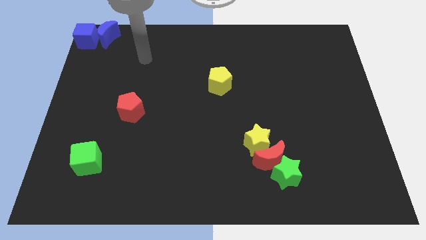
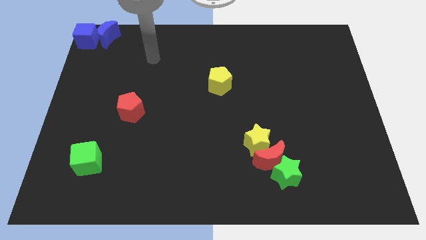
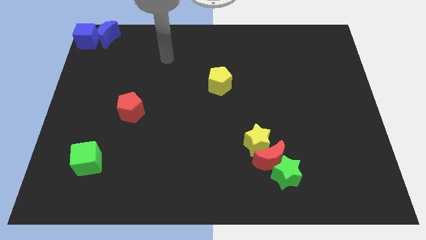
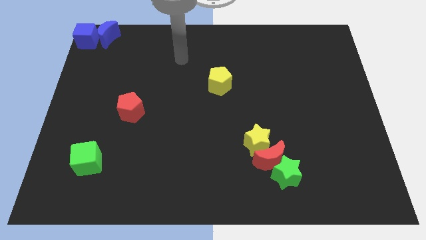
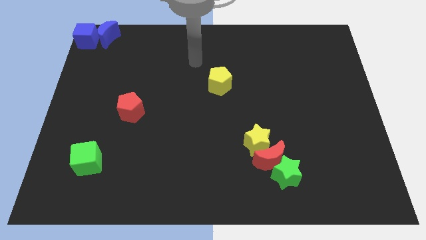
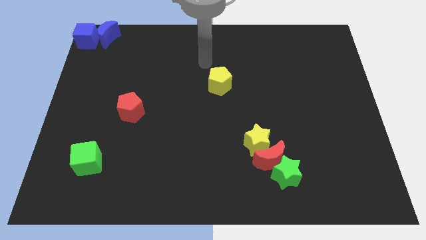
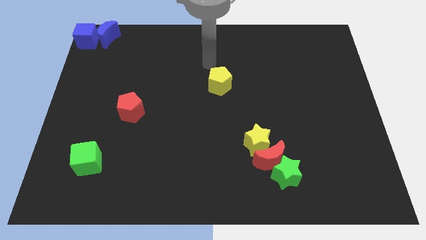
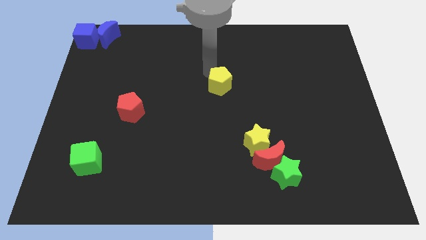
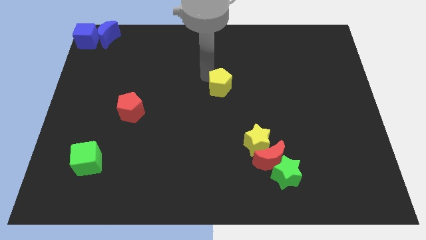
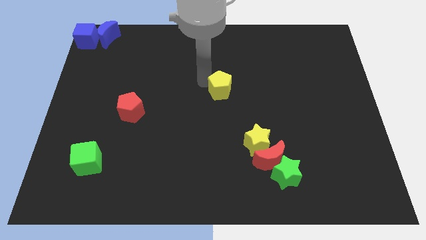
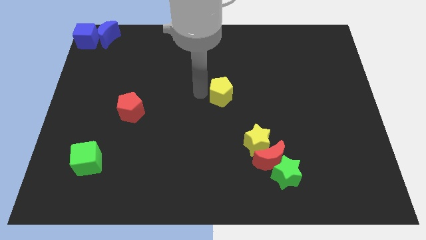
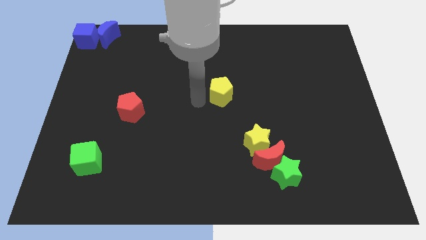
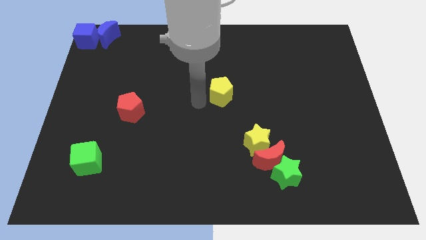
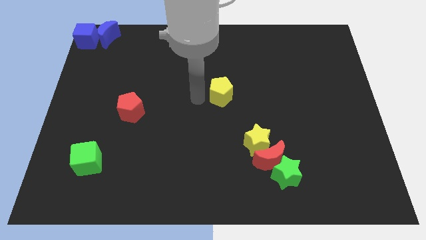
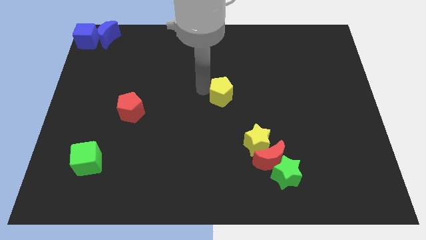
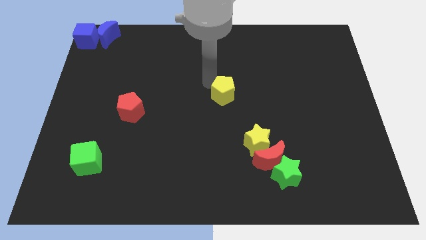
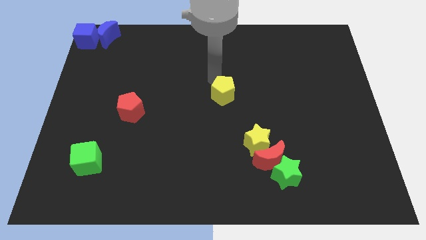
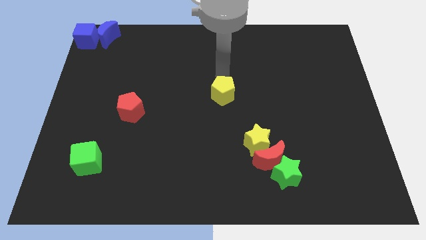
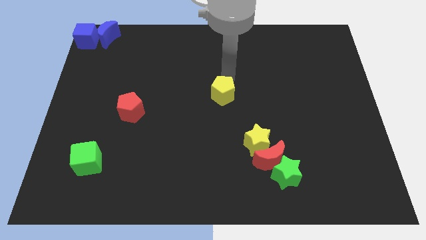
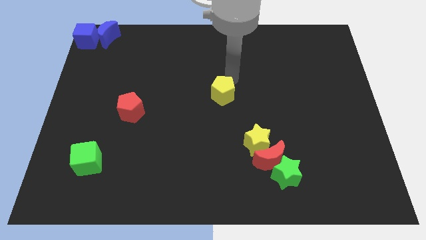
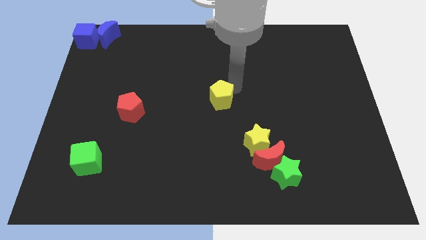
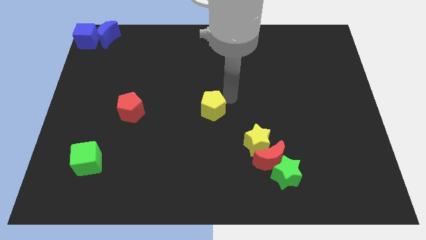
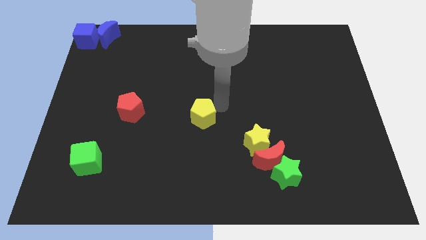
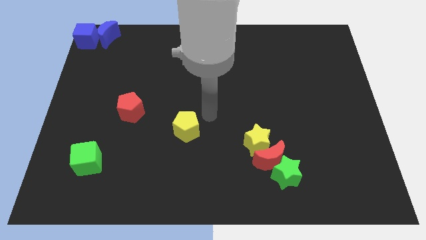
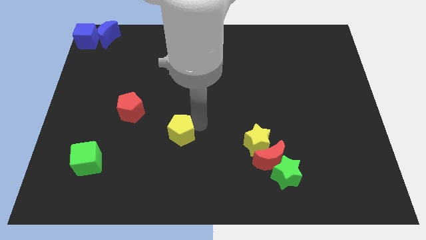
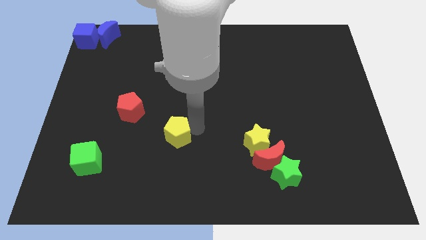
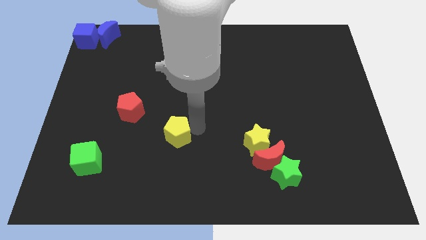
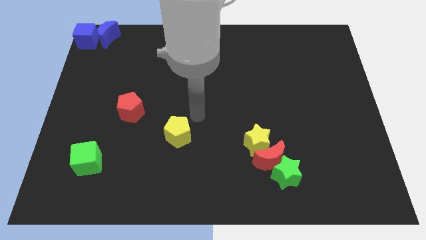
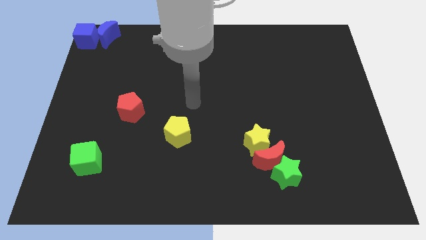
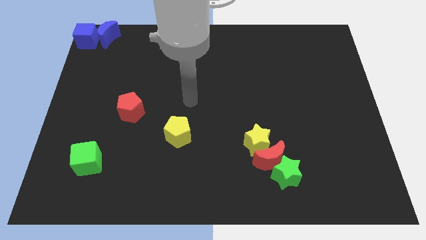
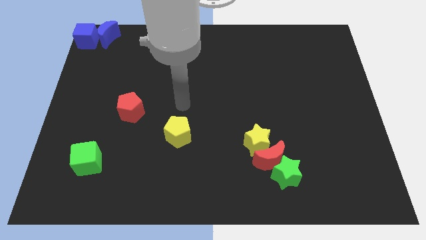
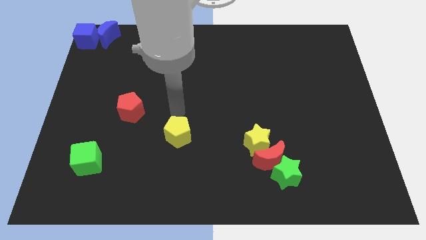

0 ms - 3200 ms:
drag the yellow pentagon diagonally bottom right to the red pentagon
